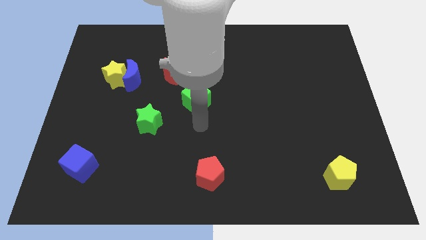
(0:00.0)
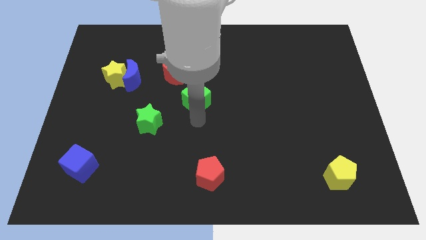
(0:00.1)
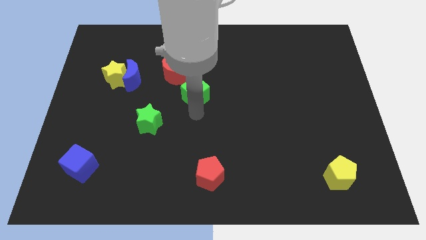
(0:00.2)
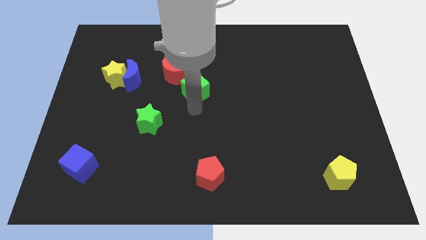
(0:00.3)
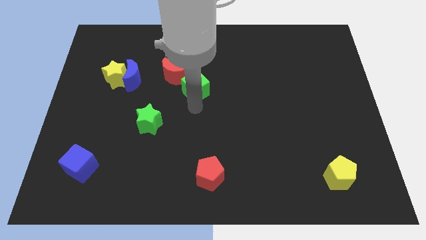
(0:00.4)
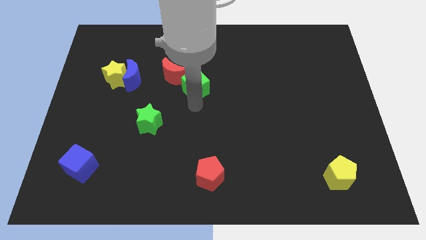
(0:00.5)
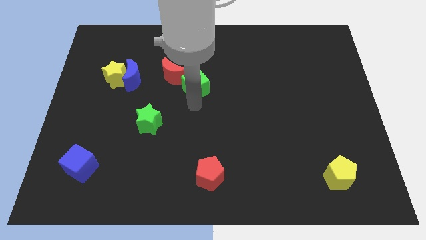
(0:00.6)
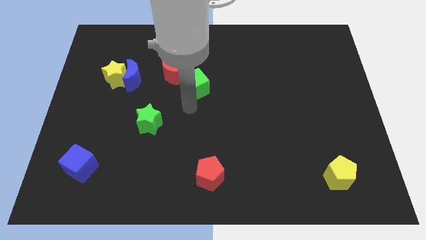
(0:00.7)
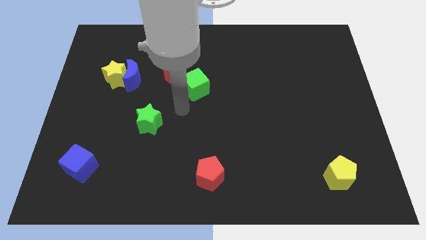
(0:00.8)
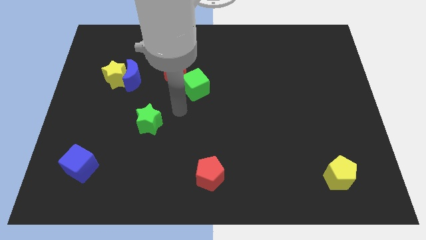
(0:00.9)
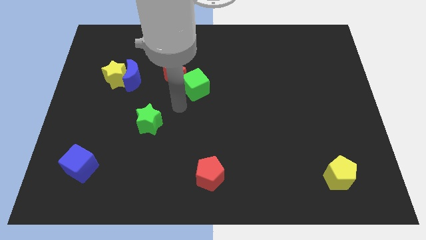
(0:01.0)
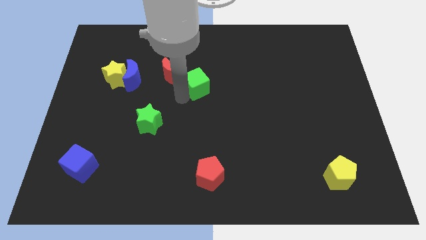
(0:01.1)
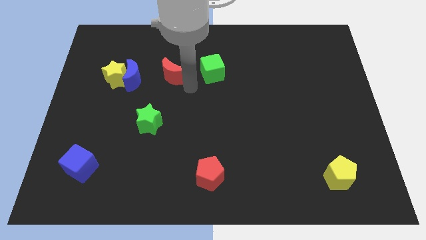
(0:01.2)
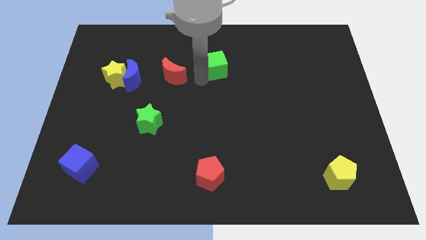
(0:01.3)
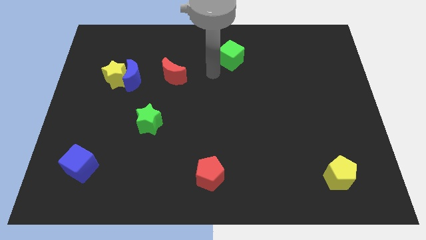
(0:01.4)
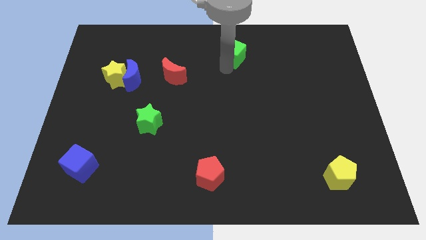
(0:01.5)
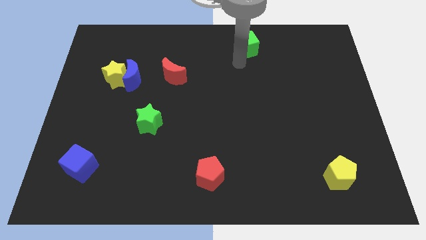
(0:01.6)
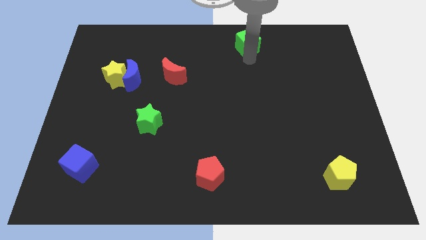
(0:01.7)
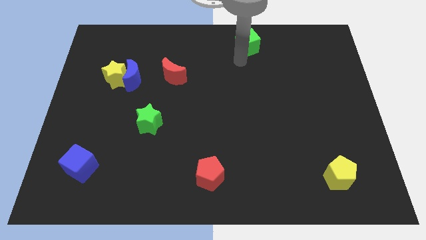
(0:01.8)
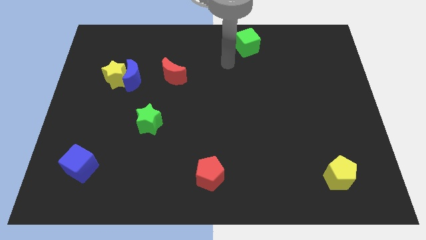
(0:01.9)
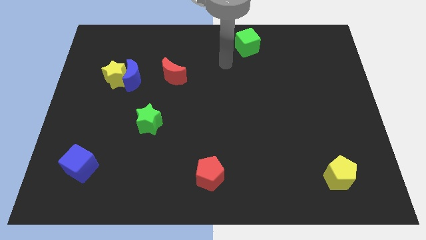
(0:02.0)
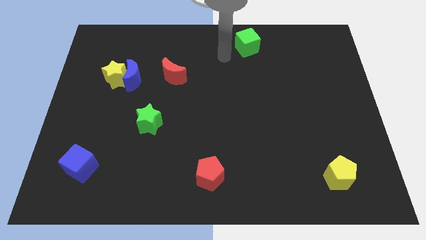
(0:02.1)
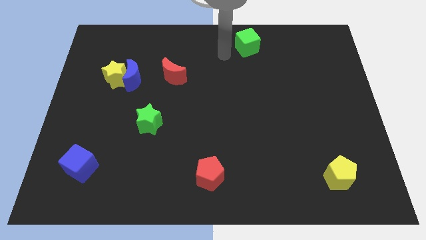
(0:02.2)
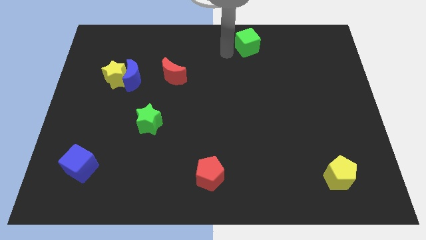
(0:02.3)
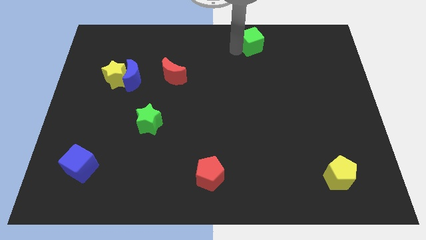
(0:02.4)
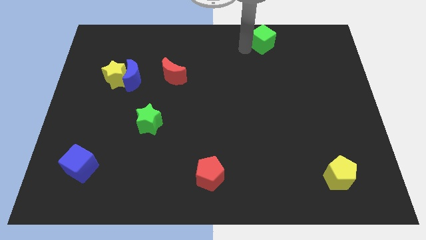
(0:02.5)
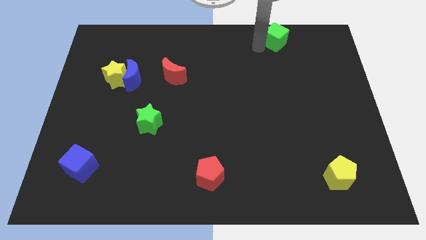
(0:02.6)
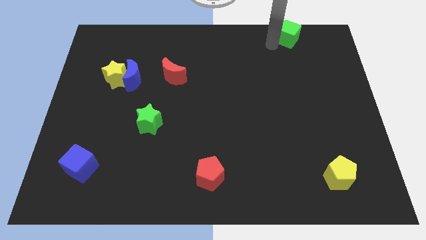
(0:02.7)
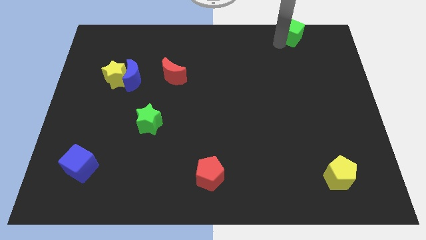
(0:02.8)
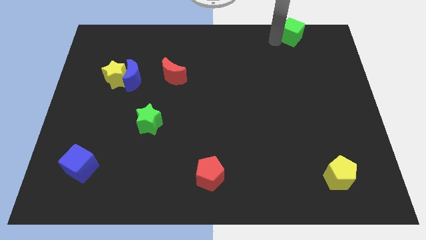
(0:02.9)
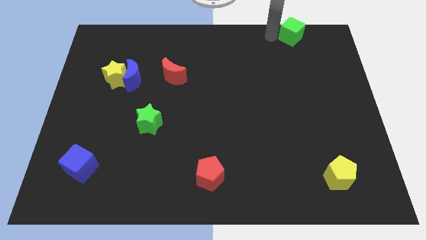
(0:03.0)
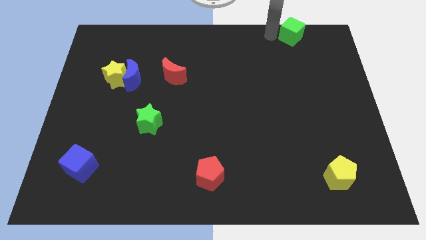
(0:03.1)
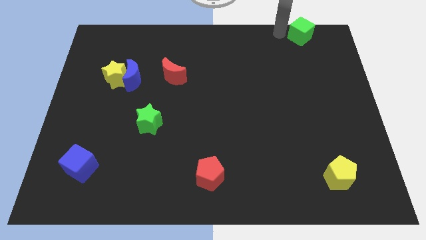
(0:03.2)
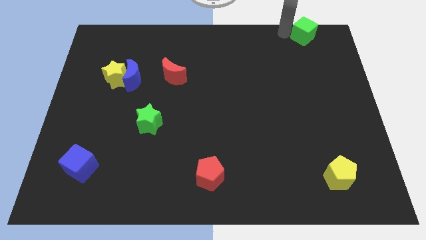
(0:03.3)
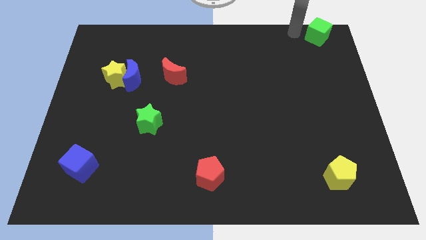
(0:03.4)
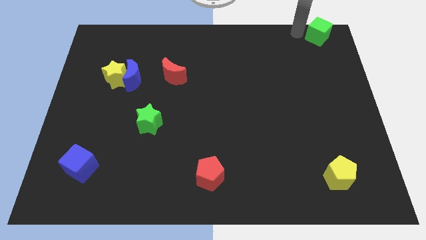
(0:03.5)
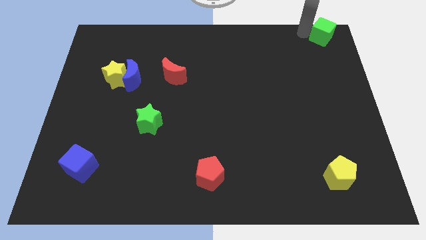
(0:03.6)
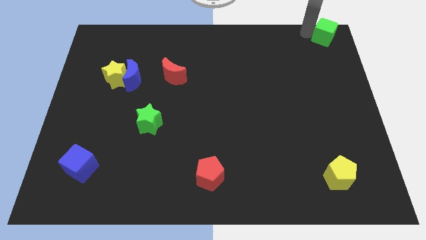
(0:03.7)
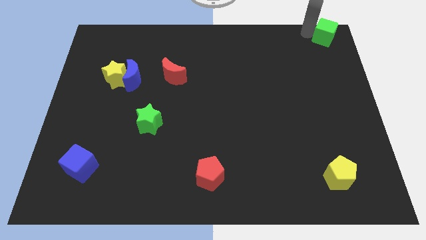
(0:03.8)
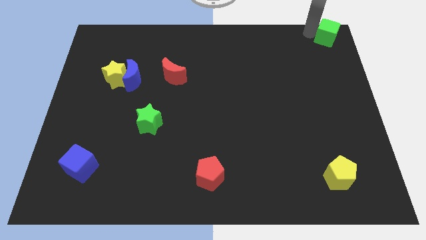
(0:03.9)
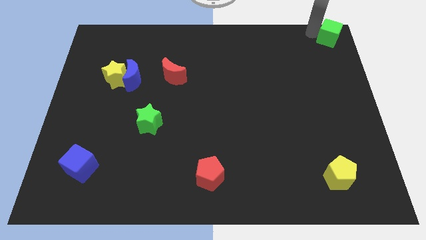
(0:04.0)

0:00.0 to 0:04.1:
move the green cube to the top right corner of the board

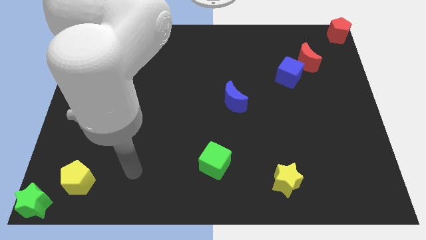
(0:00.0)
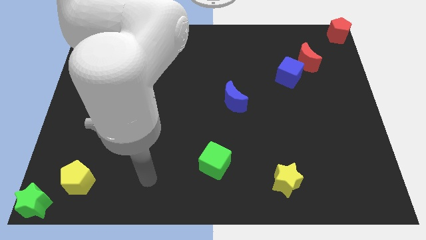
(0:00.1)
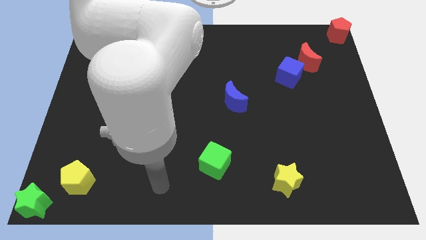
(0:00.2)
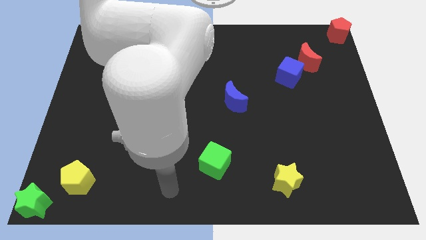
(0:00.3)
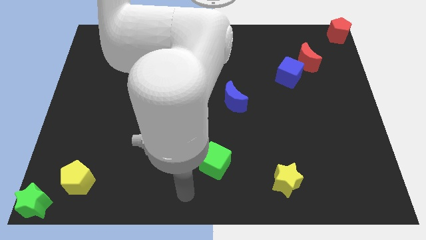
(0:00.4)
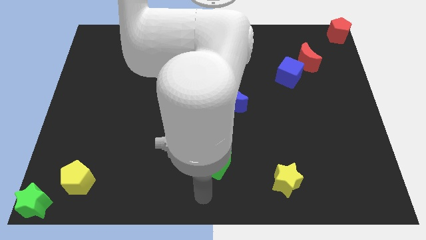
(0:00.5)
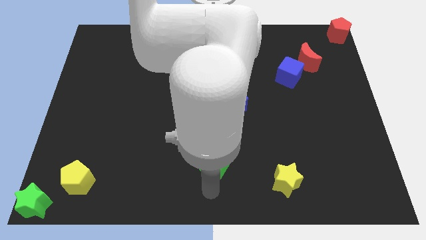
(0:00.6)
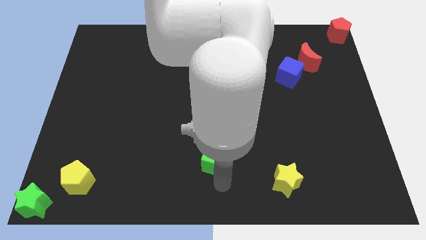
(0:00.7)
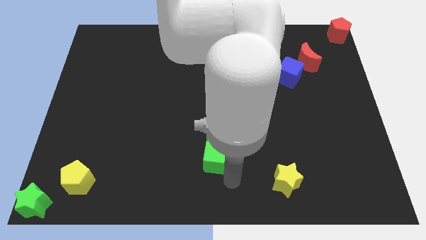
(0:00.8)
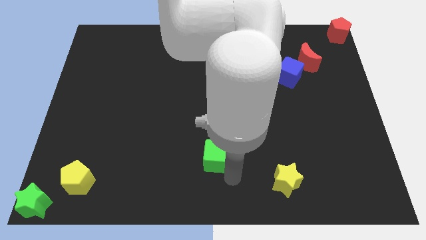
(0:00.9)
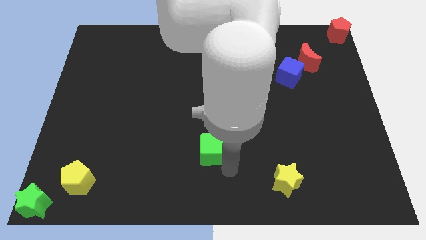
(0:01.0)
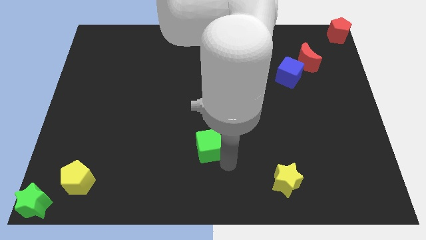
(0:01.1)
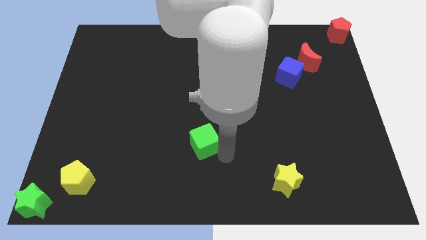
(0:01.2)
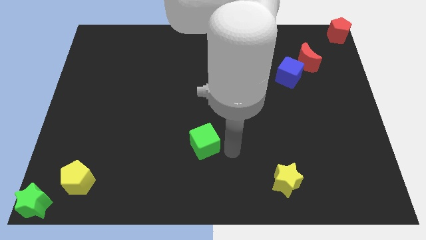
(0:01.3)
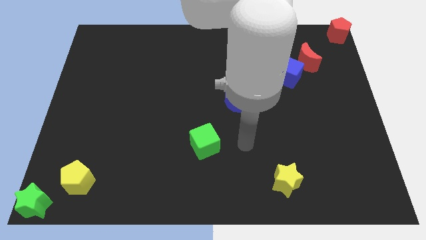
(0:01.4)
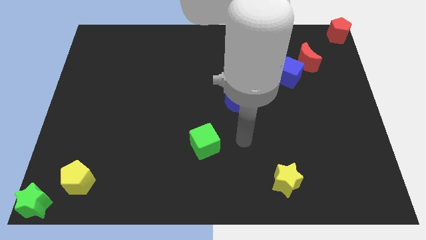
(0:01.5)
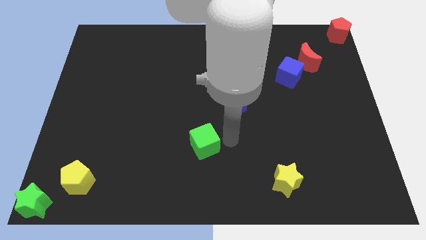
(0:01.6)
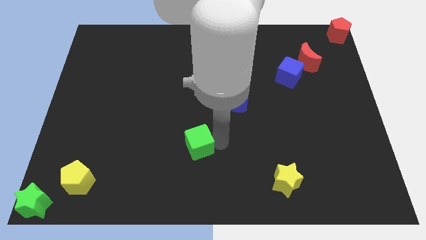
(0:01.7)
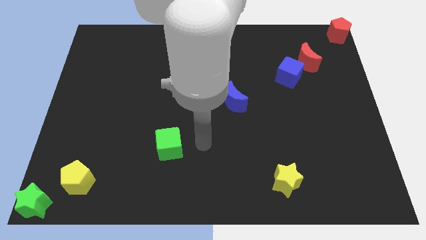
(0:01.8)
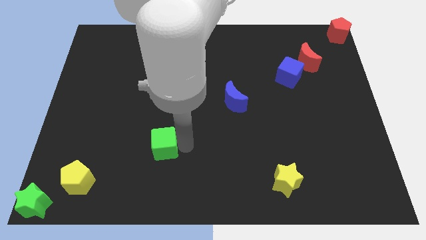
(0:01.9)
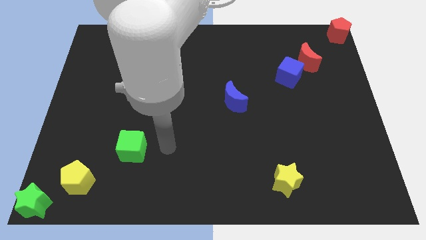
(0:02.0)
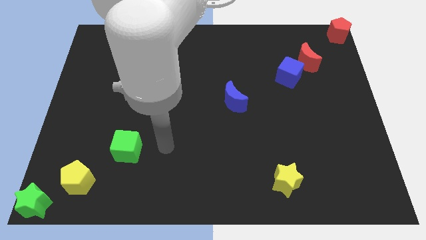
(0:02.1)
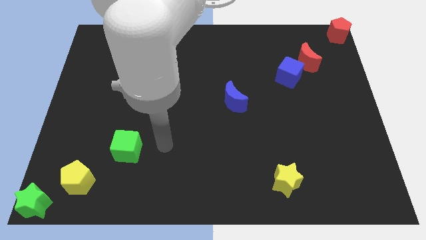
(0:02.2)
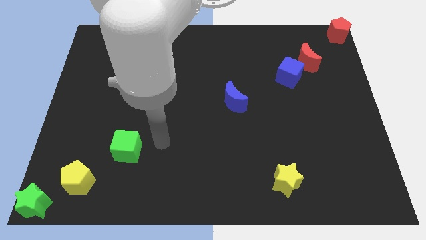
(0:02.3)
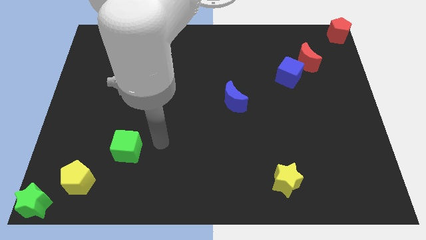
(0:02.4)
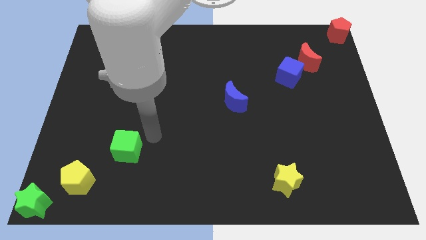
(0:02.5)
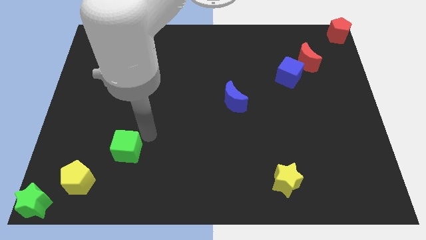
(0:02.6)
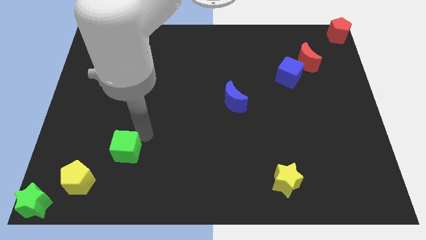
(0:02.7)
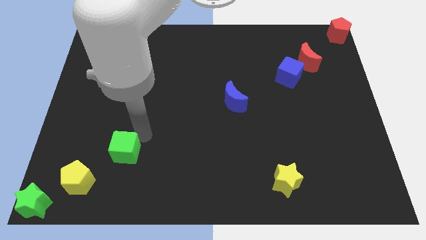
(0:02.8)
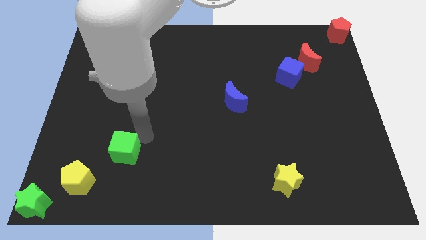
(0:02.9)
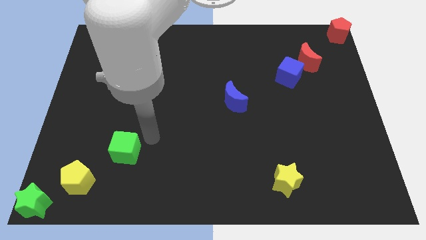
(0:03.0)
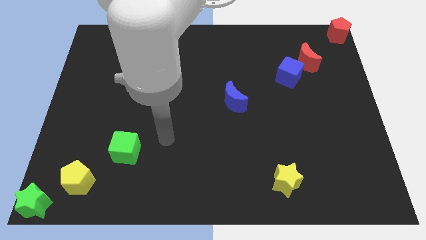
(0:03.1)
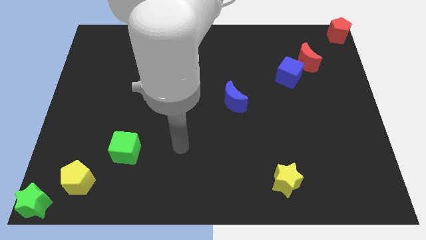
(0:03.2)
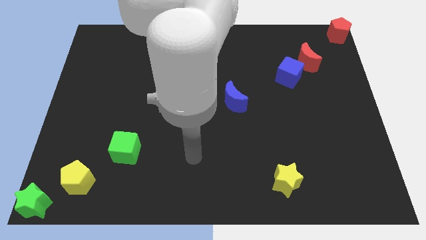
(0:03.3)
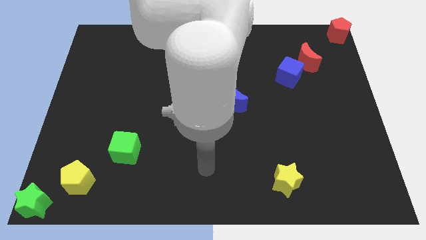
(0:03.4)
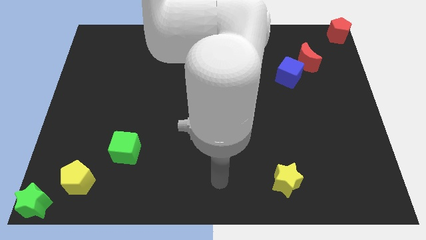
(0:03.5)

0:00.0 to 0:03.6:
push the green cube to the top right of the yellow pentagon

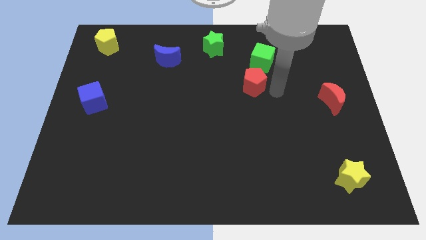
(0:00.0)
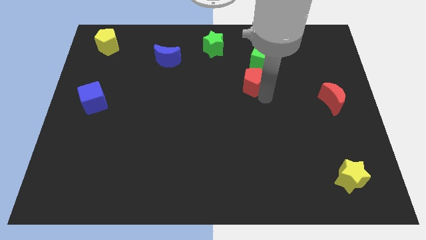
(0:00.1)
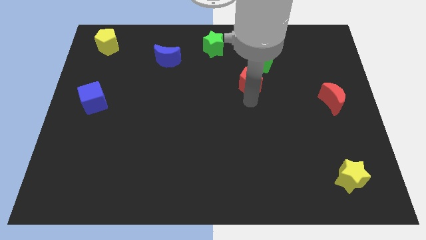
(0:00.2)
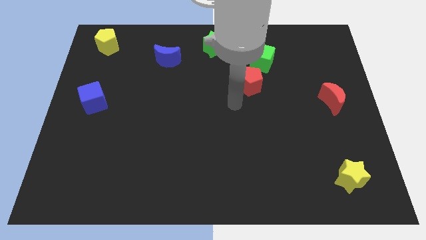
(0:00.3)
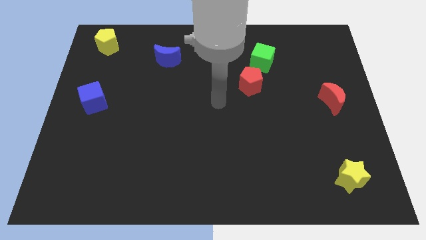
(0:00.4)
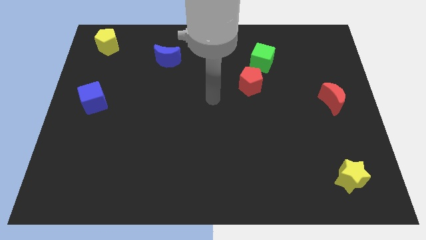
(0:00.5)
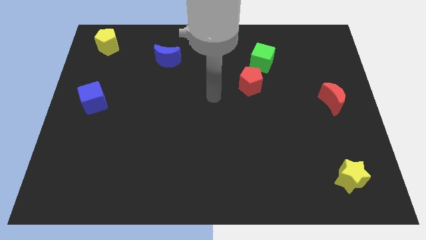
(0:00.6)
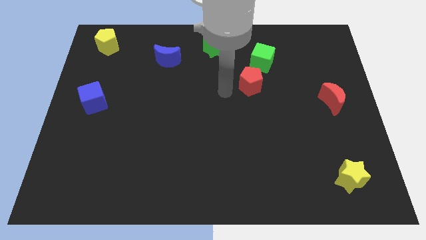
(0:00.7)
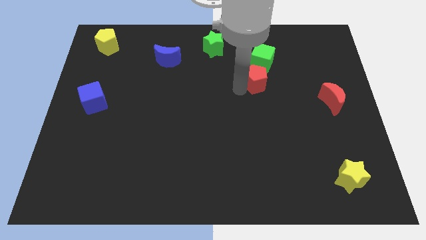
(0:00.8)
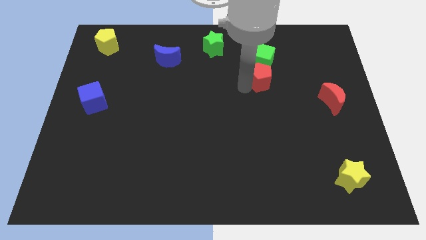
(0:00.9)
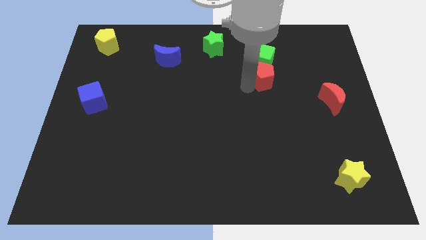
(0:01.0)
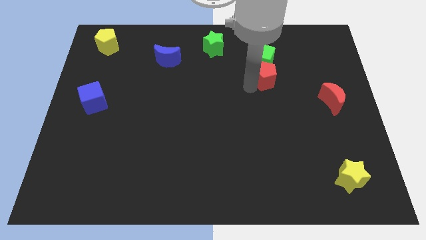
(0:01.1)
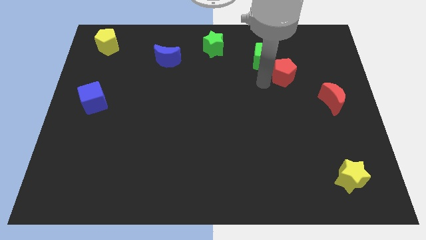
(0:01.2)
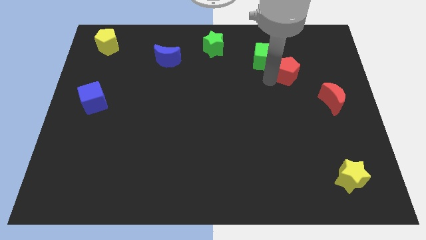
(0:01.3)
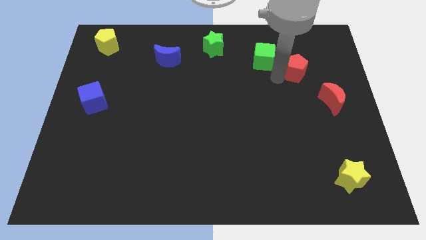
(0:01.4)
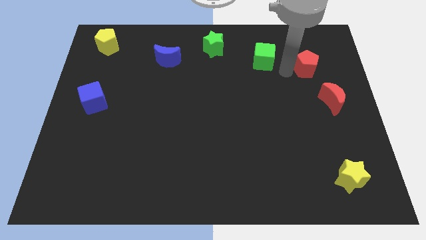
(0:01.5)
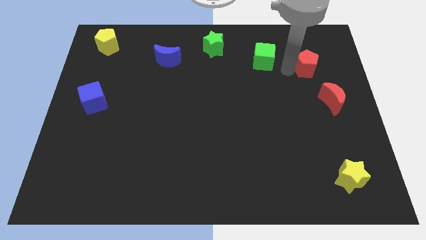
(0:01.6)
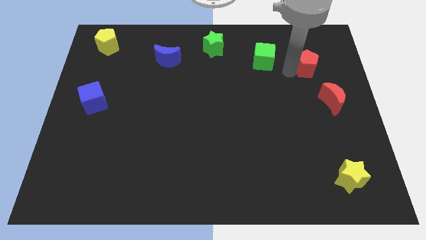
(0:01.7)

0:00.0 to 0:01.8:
put the red pentagon at the right side of the green cube
